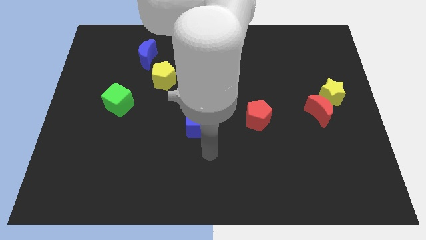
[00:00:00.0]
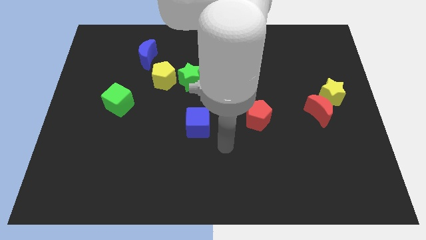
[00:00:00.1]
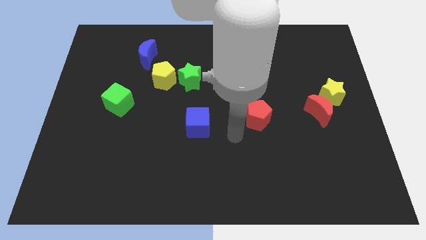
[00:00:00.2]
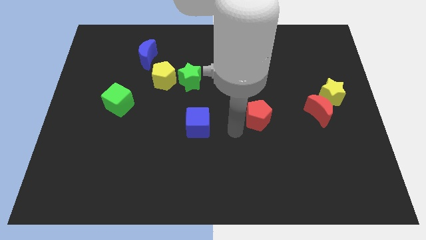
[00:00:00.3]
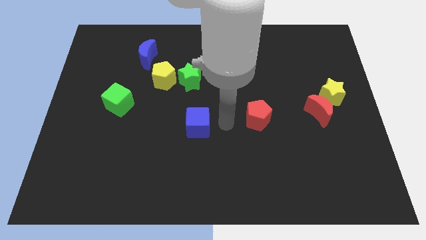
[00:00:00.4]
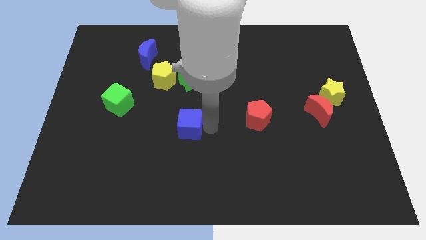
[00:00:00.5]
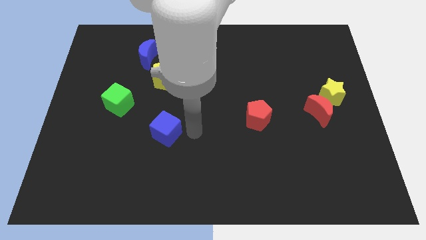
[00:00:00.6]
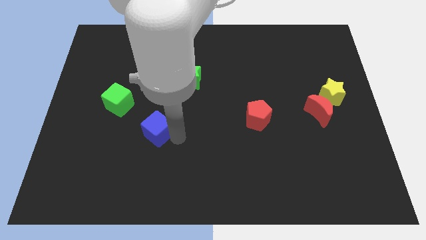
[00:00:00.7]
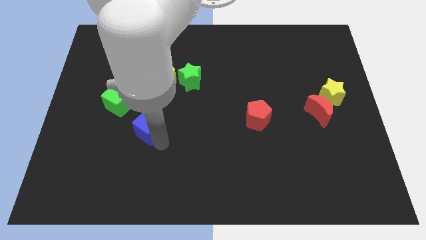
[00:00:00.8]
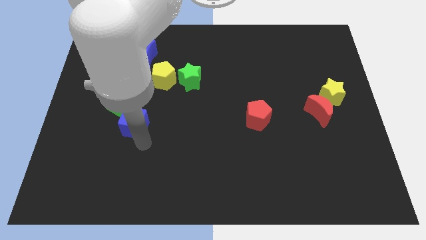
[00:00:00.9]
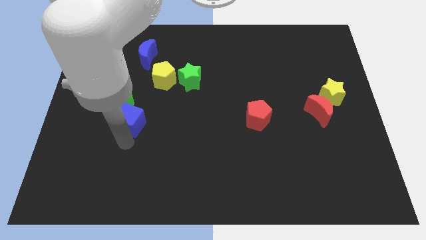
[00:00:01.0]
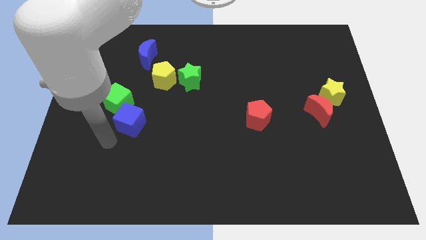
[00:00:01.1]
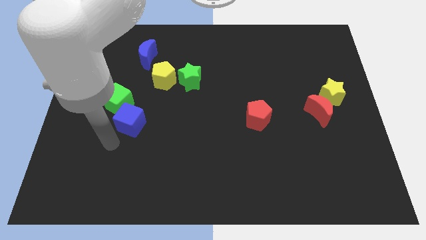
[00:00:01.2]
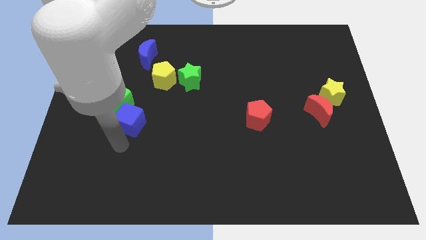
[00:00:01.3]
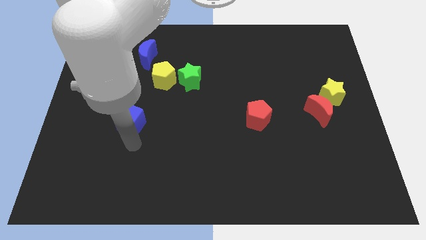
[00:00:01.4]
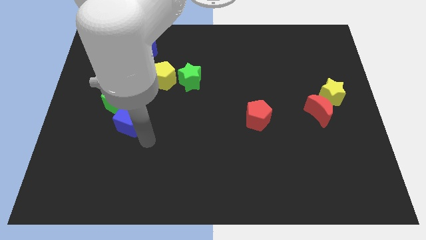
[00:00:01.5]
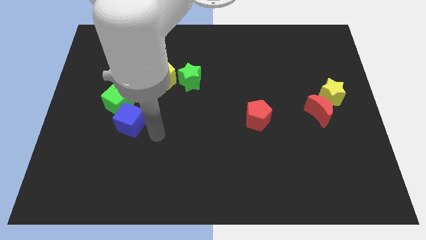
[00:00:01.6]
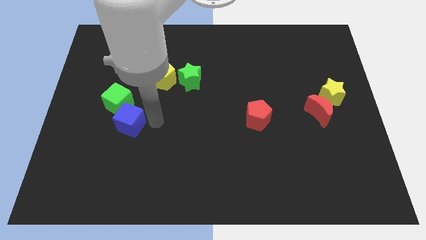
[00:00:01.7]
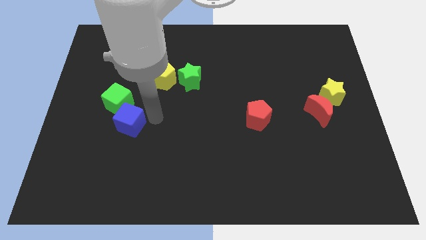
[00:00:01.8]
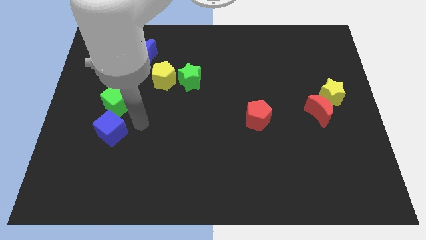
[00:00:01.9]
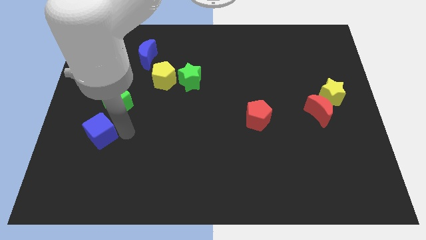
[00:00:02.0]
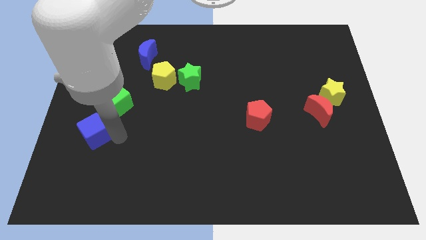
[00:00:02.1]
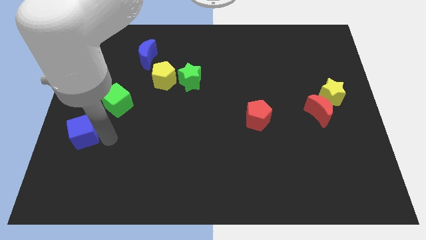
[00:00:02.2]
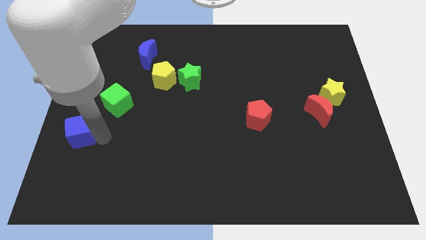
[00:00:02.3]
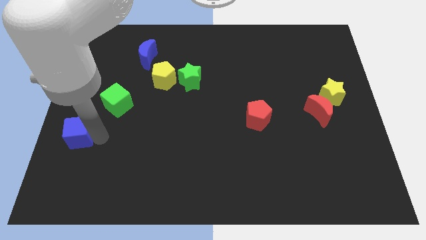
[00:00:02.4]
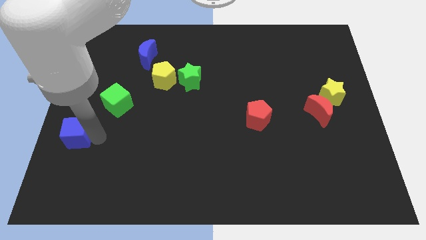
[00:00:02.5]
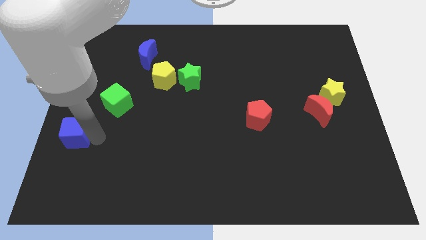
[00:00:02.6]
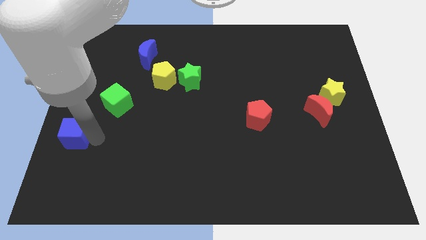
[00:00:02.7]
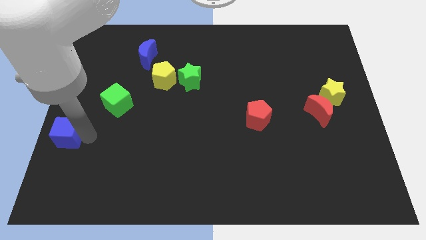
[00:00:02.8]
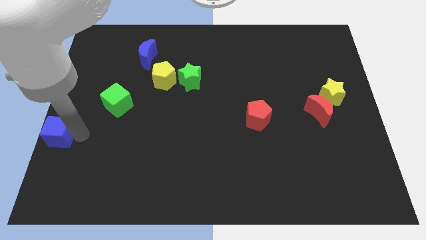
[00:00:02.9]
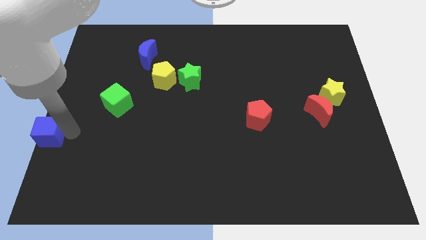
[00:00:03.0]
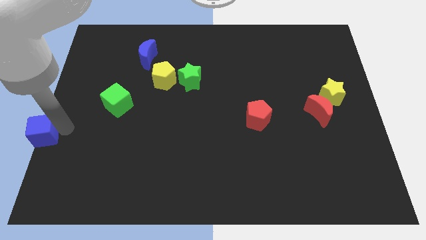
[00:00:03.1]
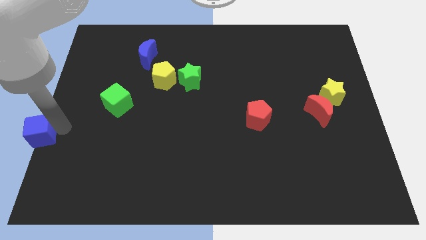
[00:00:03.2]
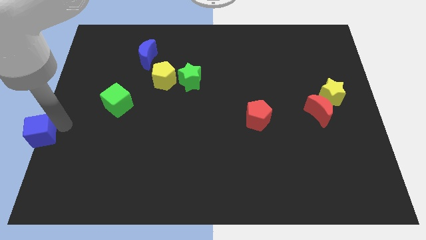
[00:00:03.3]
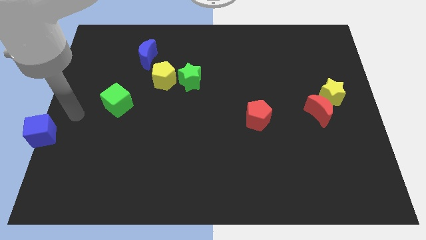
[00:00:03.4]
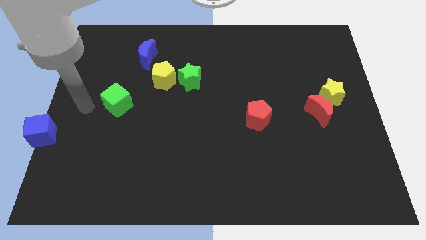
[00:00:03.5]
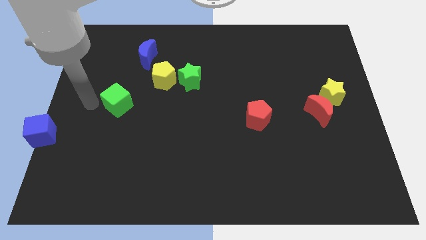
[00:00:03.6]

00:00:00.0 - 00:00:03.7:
slide the blue cube diagonally bottom left to the green cube

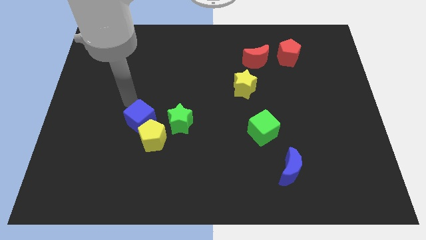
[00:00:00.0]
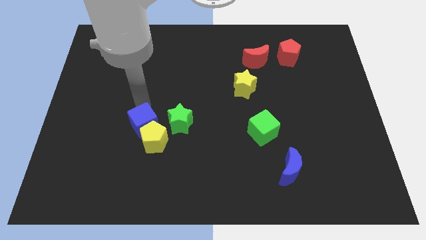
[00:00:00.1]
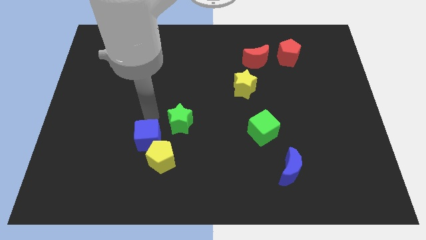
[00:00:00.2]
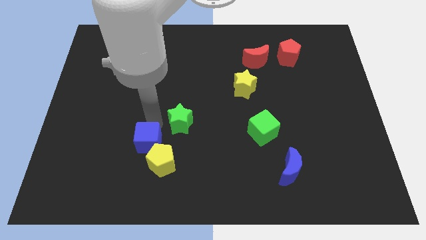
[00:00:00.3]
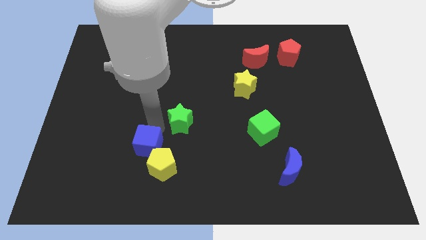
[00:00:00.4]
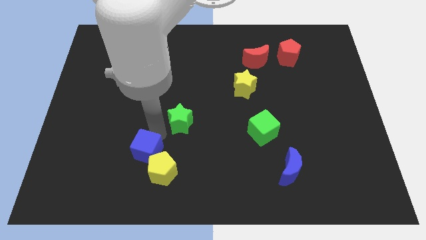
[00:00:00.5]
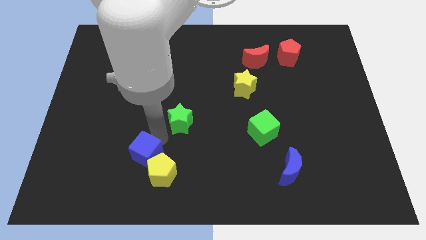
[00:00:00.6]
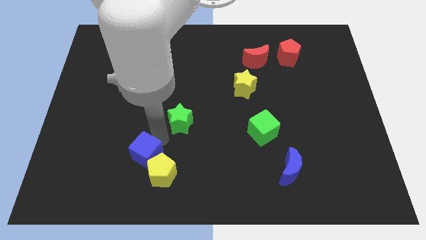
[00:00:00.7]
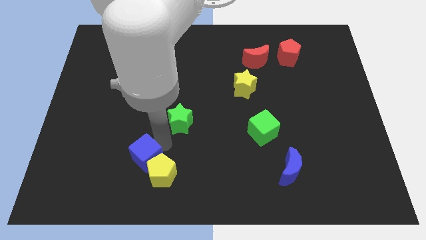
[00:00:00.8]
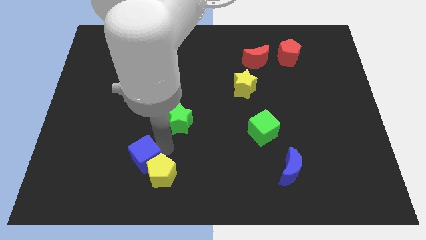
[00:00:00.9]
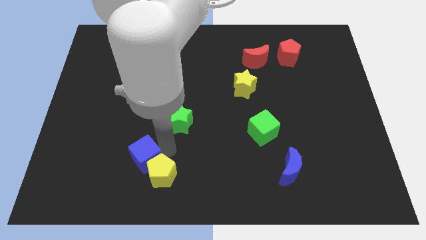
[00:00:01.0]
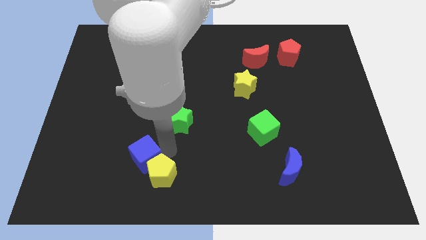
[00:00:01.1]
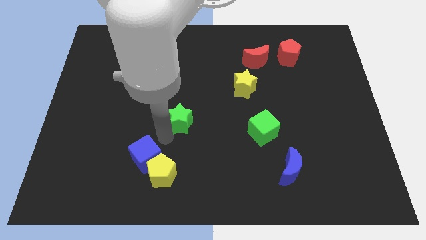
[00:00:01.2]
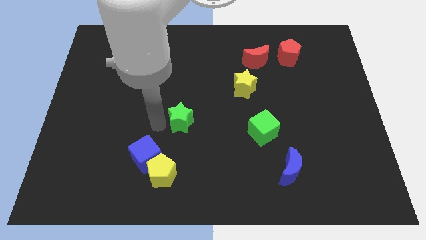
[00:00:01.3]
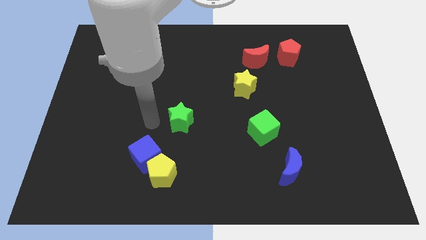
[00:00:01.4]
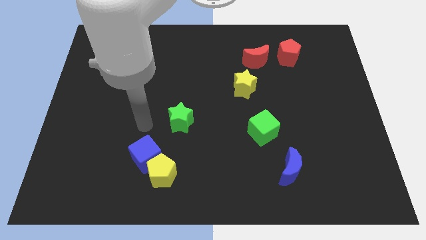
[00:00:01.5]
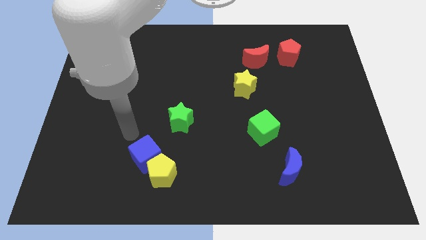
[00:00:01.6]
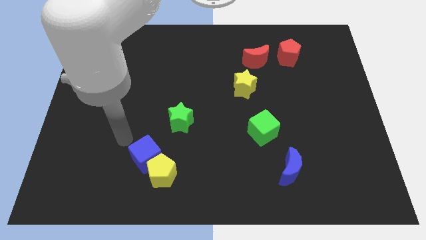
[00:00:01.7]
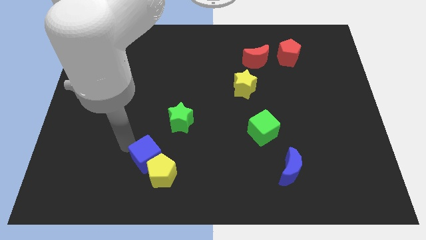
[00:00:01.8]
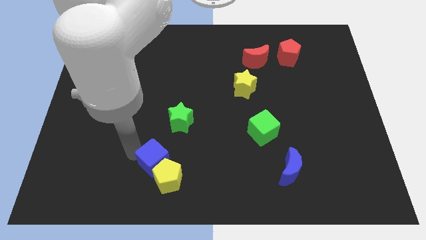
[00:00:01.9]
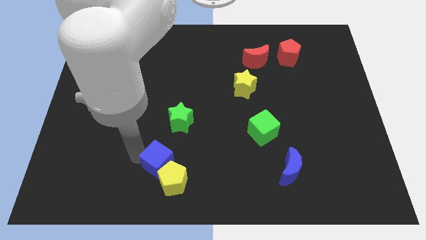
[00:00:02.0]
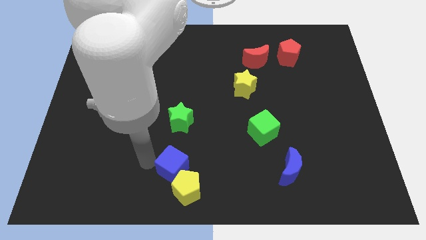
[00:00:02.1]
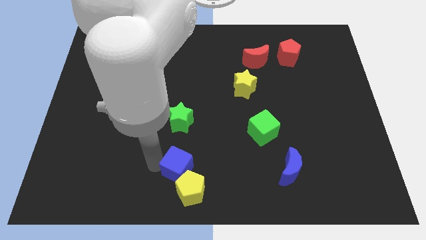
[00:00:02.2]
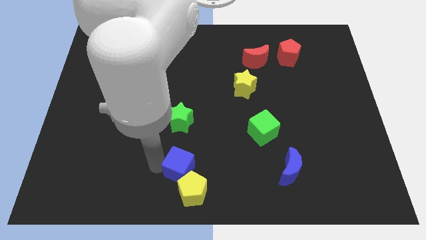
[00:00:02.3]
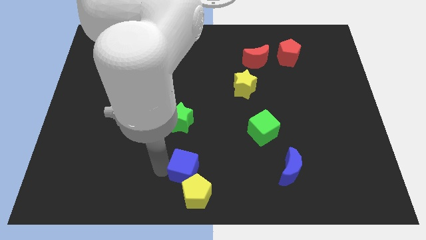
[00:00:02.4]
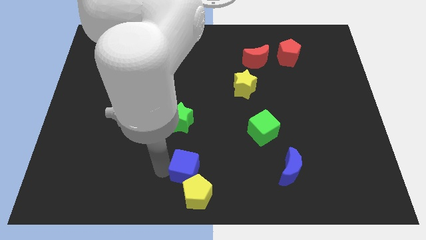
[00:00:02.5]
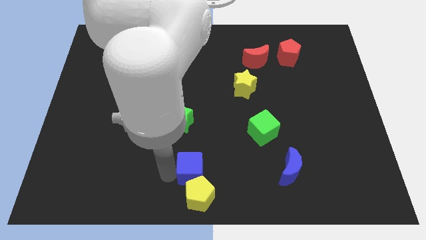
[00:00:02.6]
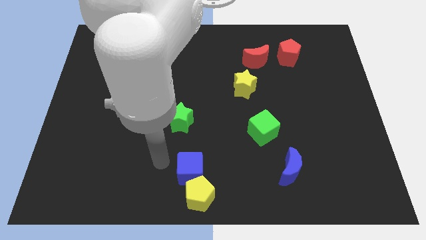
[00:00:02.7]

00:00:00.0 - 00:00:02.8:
place the blue cube in between the green star and yellow pentagon

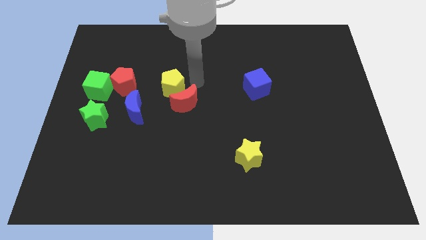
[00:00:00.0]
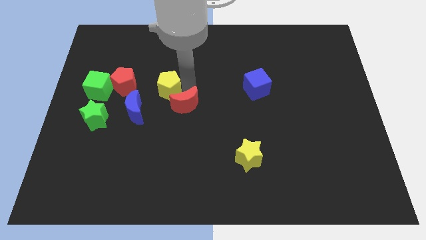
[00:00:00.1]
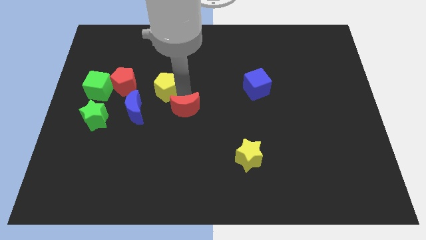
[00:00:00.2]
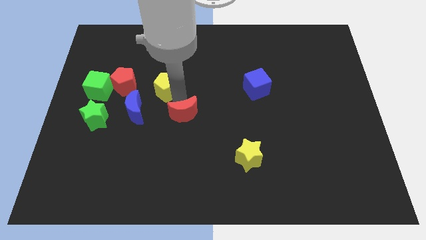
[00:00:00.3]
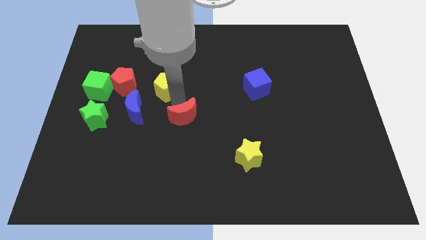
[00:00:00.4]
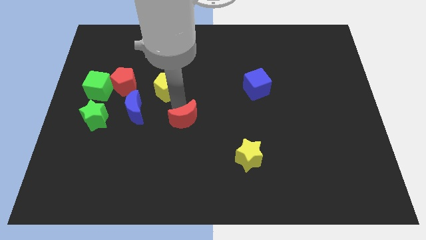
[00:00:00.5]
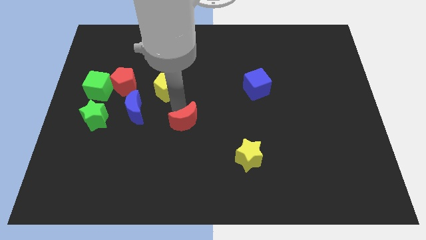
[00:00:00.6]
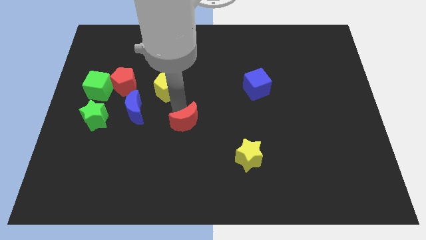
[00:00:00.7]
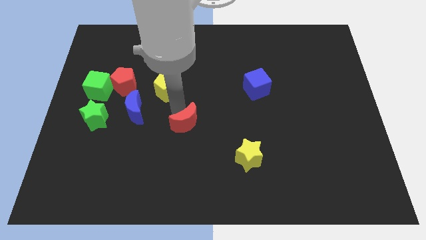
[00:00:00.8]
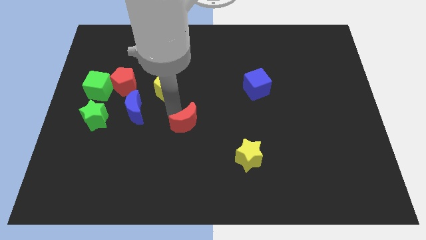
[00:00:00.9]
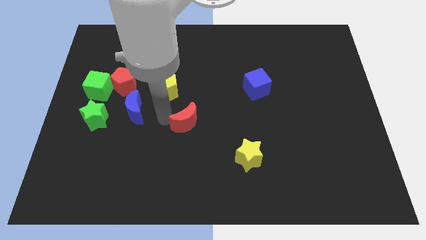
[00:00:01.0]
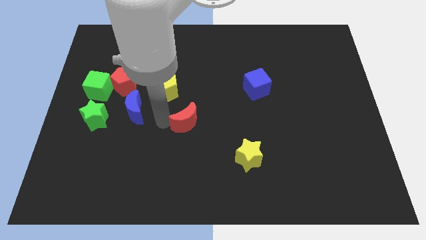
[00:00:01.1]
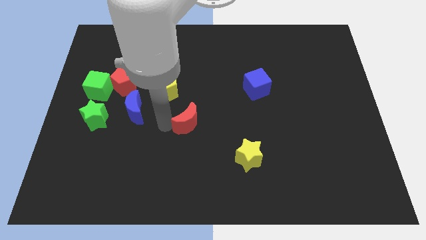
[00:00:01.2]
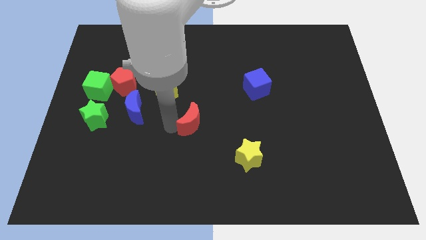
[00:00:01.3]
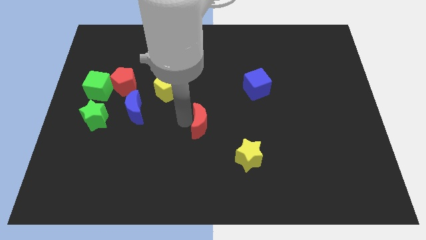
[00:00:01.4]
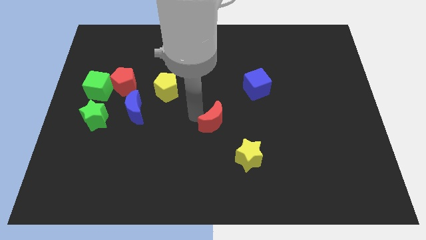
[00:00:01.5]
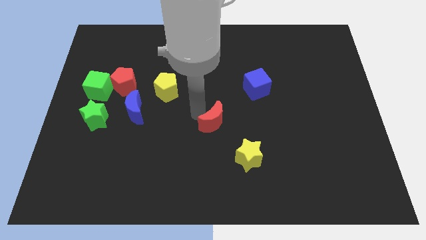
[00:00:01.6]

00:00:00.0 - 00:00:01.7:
move the red crescent to the center of the board

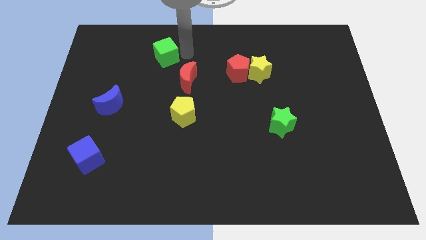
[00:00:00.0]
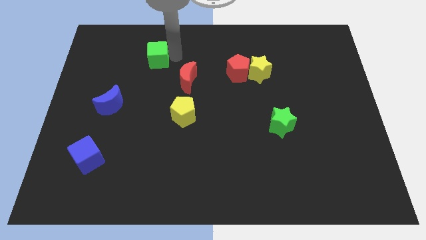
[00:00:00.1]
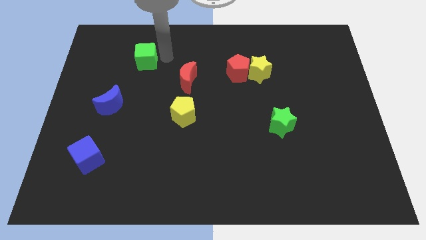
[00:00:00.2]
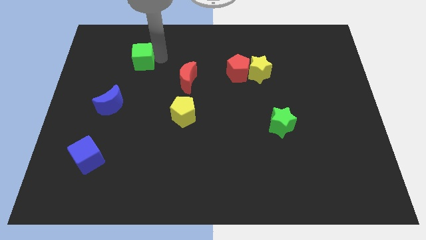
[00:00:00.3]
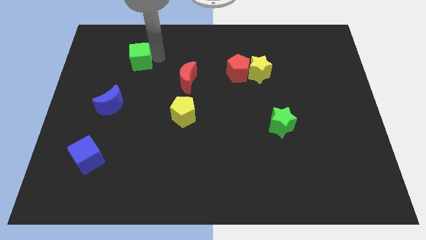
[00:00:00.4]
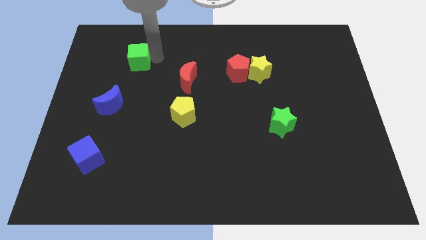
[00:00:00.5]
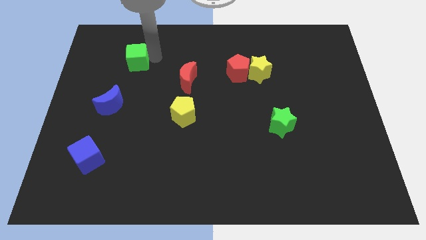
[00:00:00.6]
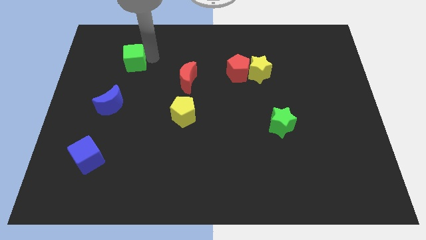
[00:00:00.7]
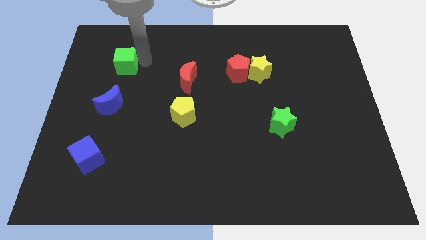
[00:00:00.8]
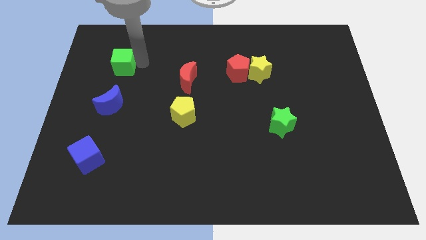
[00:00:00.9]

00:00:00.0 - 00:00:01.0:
place green cube above blue crescent
